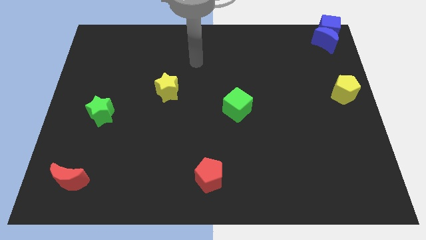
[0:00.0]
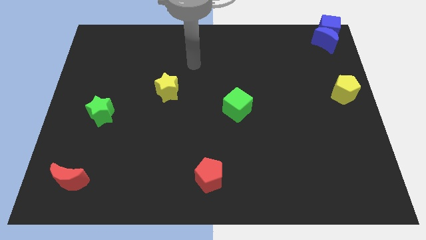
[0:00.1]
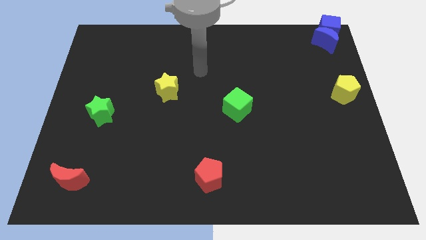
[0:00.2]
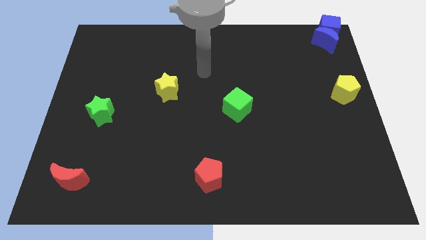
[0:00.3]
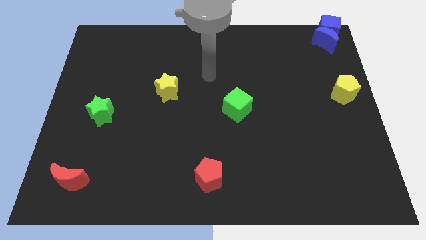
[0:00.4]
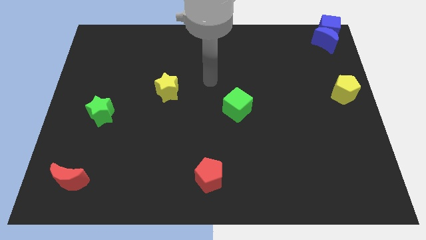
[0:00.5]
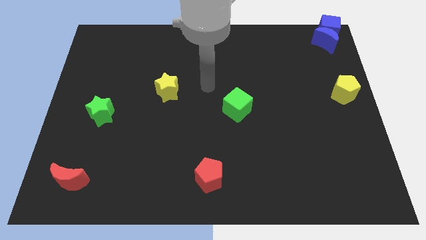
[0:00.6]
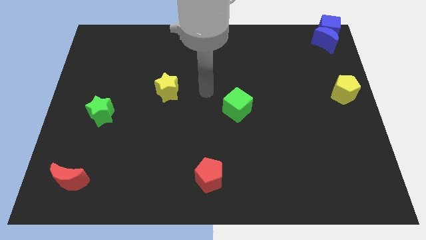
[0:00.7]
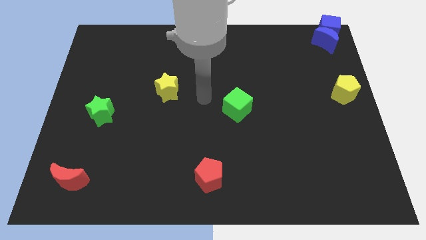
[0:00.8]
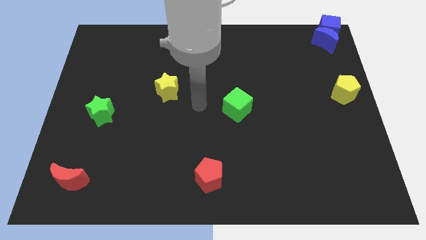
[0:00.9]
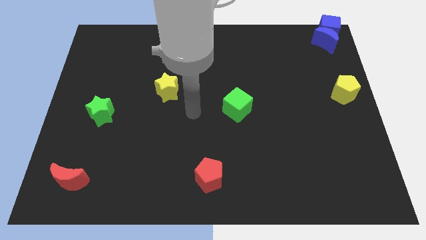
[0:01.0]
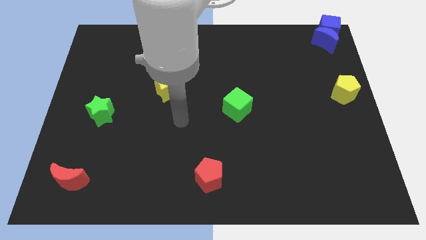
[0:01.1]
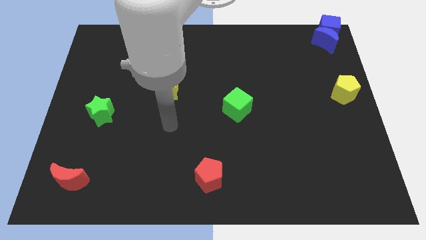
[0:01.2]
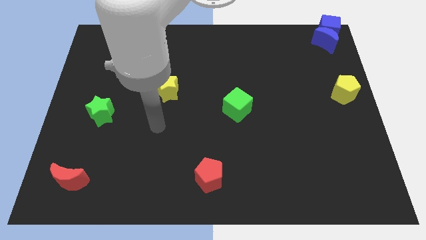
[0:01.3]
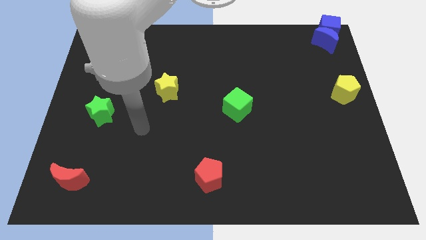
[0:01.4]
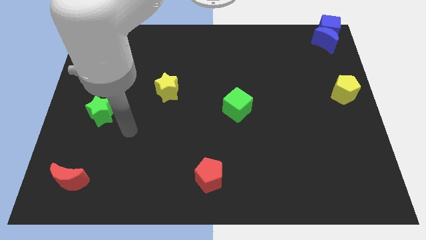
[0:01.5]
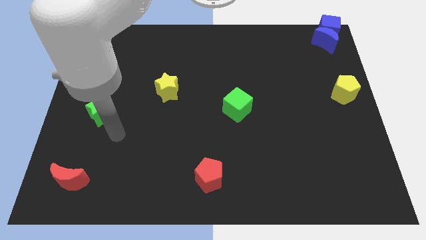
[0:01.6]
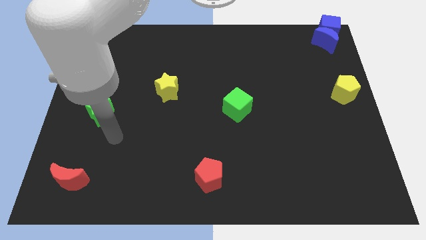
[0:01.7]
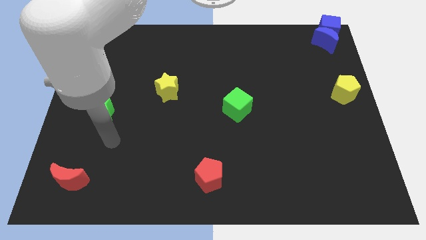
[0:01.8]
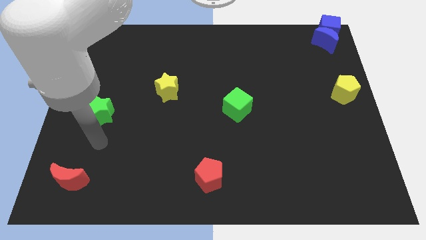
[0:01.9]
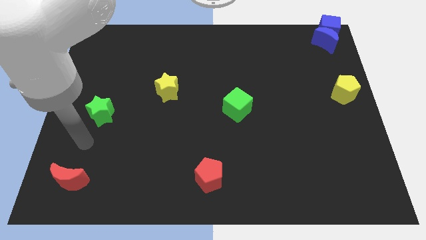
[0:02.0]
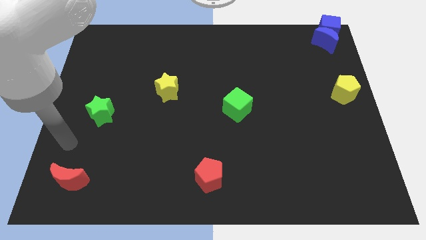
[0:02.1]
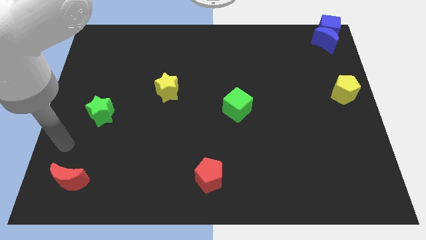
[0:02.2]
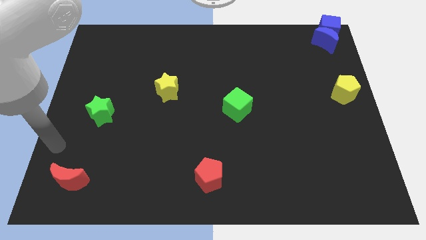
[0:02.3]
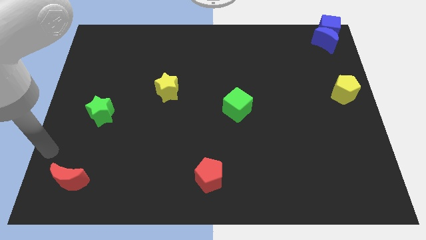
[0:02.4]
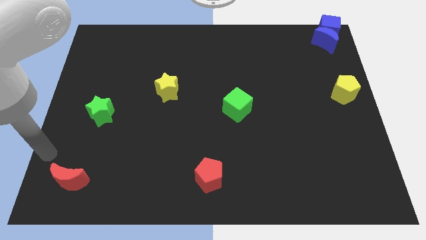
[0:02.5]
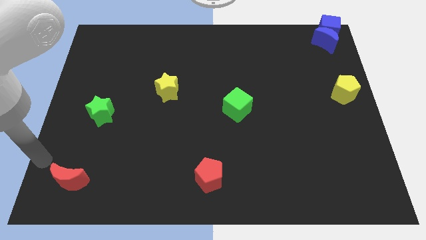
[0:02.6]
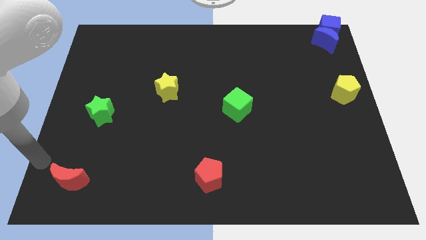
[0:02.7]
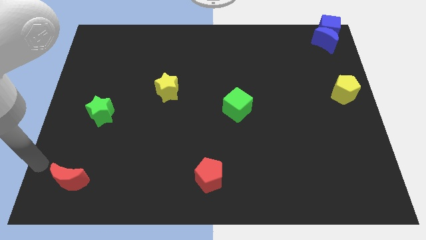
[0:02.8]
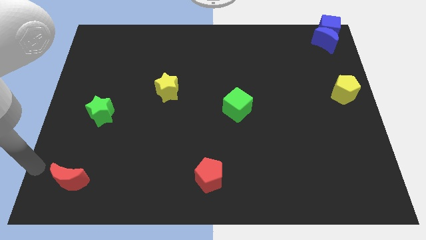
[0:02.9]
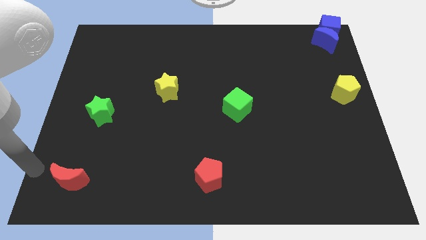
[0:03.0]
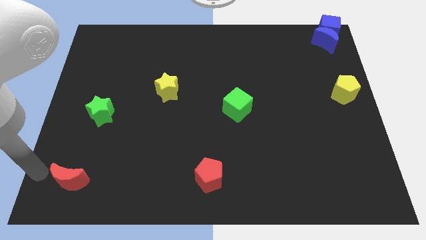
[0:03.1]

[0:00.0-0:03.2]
place your arm to the left side of red moon

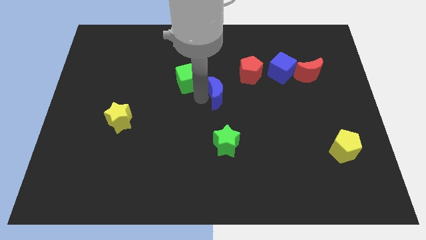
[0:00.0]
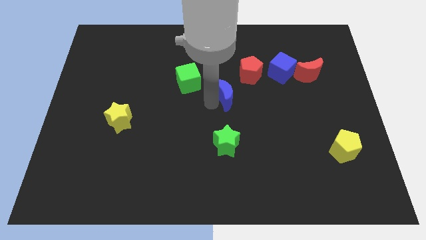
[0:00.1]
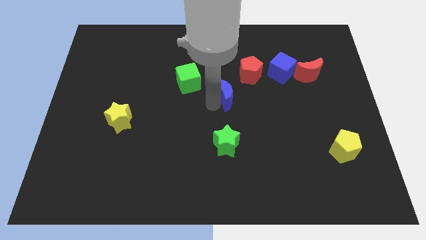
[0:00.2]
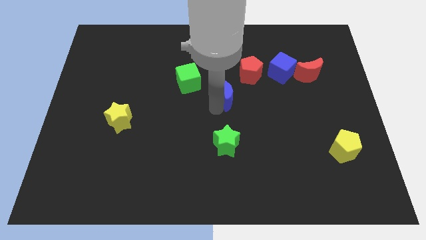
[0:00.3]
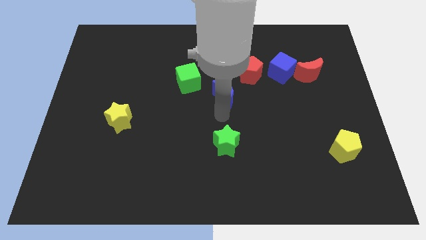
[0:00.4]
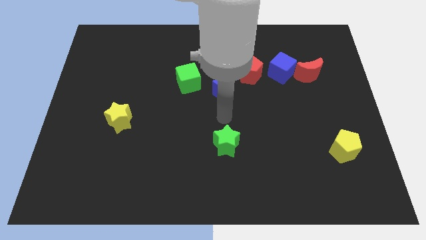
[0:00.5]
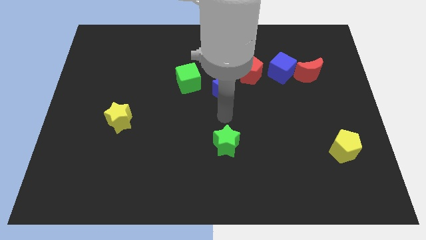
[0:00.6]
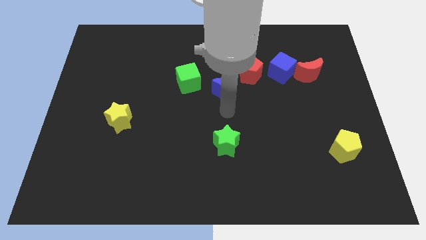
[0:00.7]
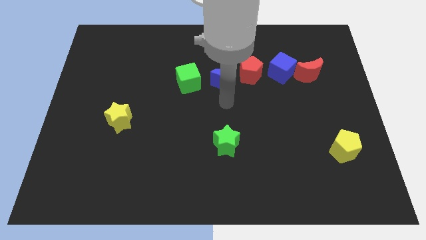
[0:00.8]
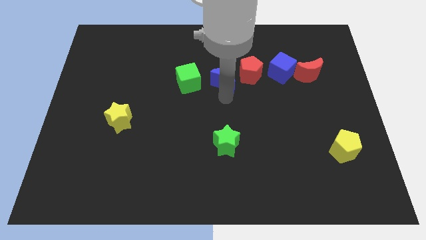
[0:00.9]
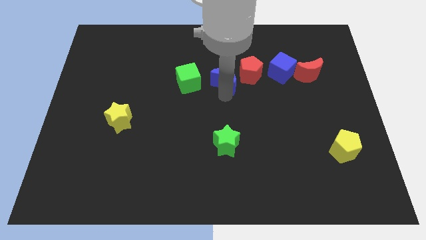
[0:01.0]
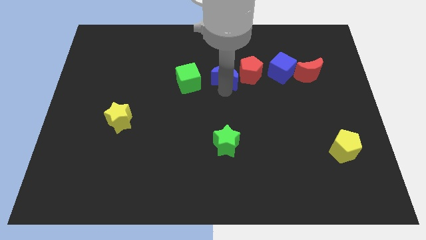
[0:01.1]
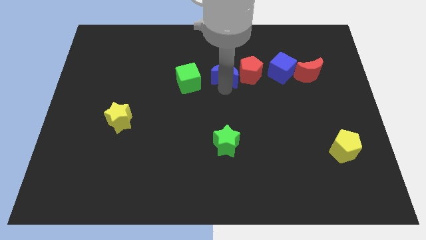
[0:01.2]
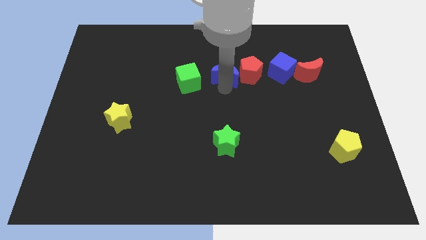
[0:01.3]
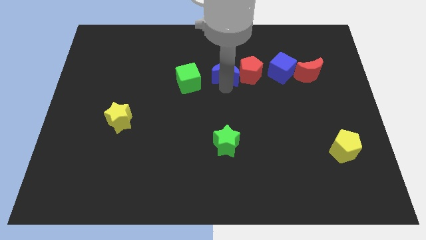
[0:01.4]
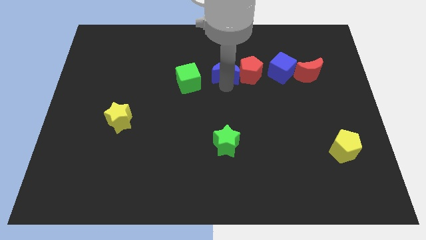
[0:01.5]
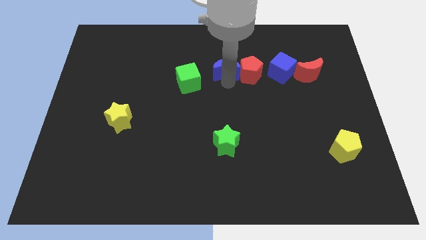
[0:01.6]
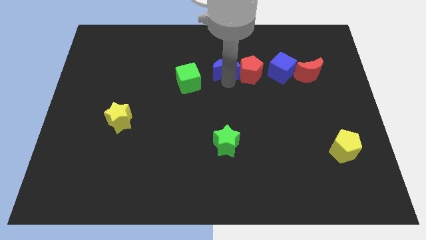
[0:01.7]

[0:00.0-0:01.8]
place the blue crescent left to the red pentagon

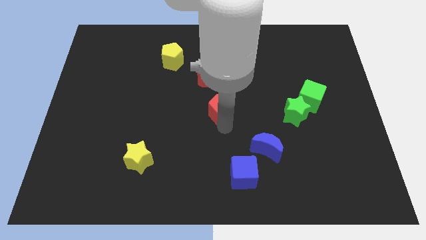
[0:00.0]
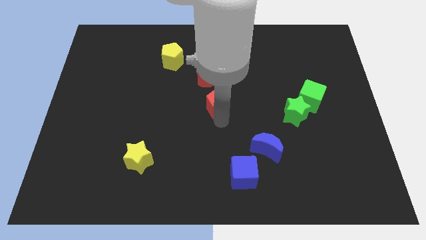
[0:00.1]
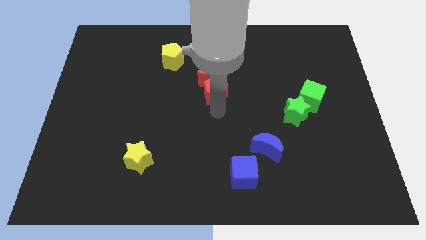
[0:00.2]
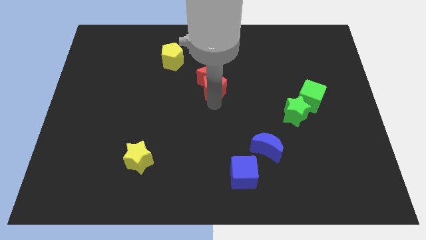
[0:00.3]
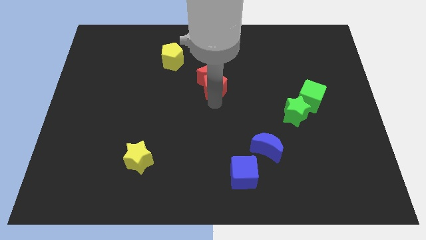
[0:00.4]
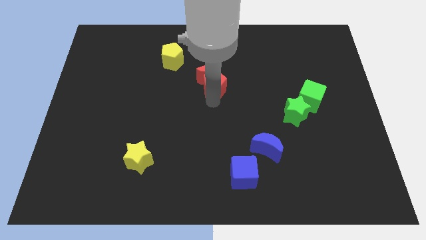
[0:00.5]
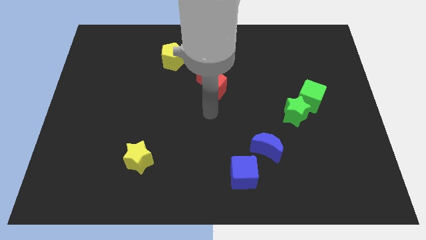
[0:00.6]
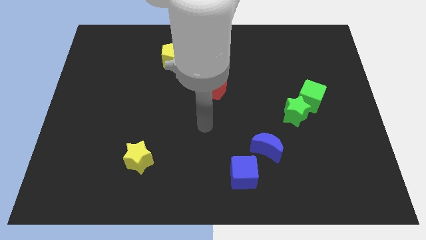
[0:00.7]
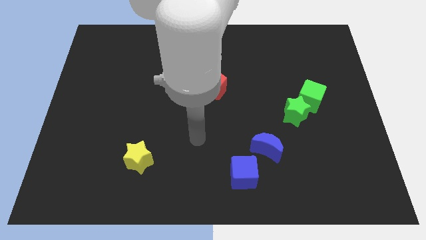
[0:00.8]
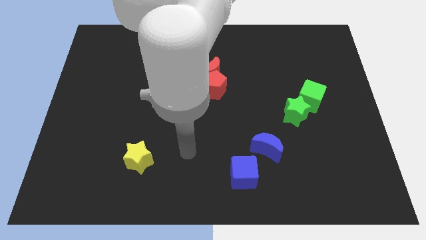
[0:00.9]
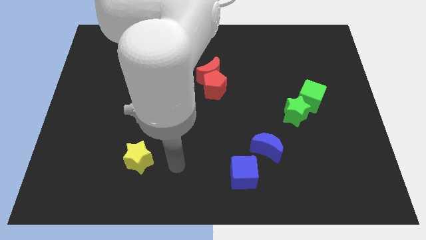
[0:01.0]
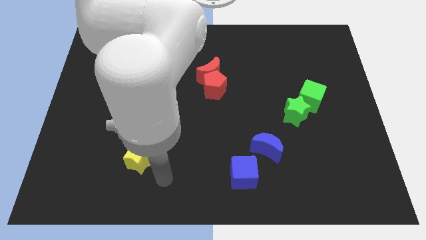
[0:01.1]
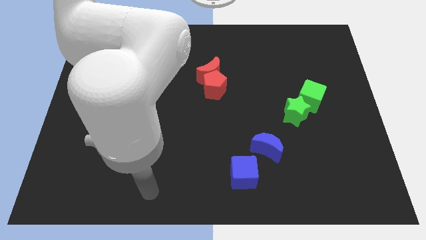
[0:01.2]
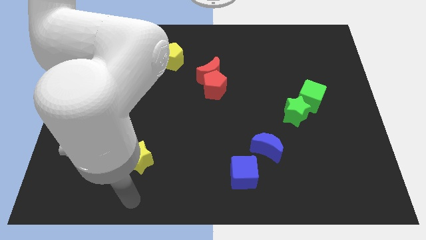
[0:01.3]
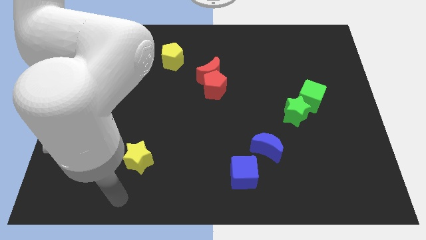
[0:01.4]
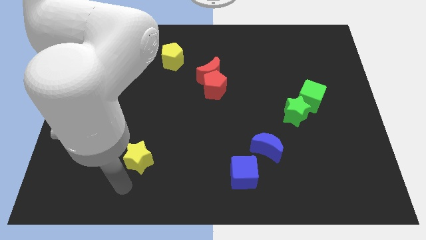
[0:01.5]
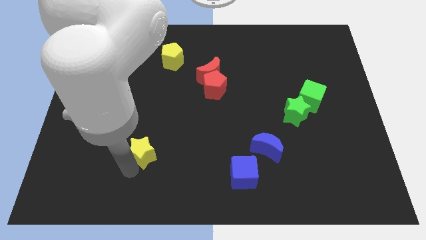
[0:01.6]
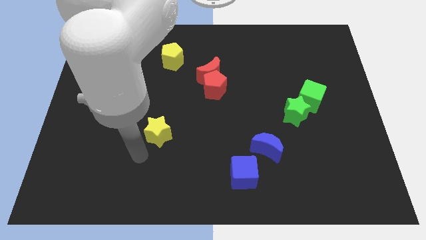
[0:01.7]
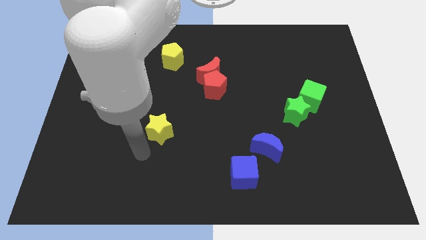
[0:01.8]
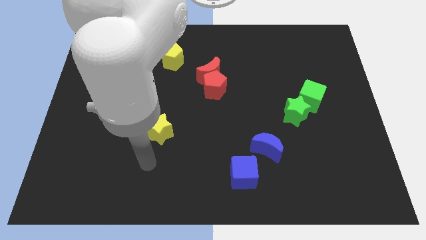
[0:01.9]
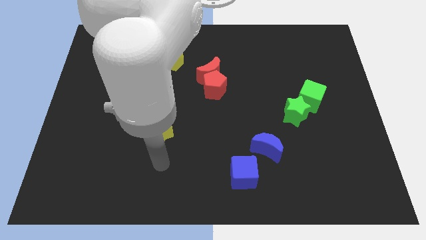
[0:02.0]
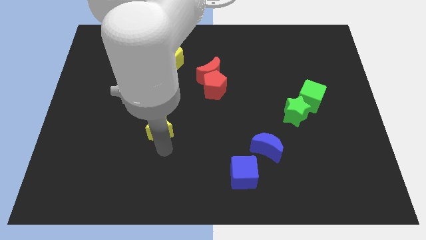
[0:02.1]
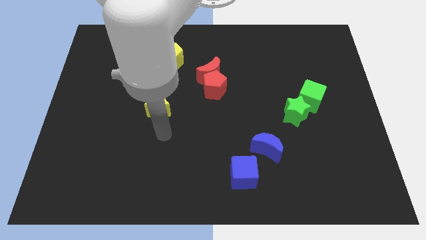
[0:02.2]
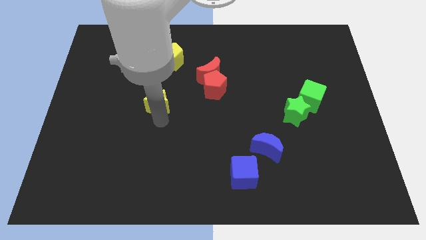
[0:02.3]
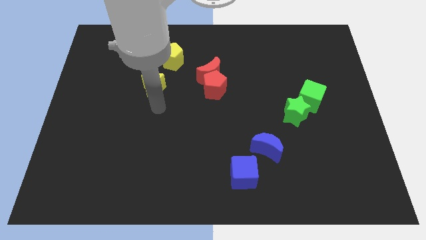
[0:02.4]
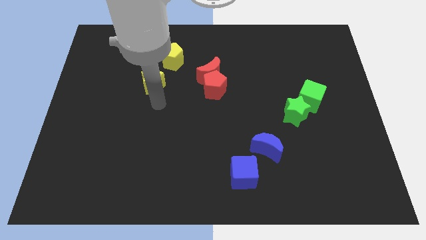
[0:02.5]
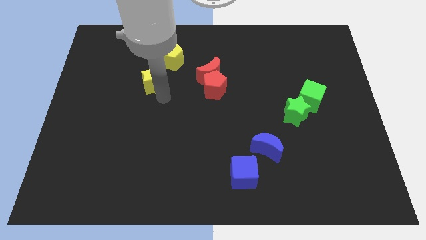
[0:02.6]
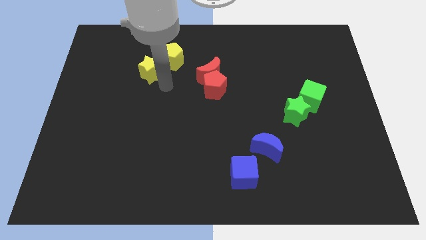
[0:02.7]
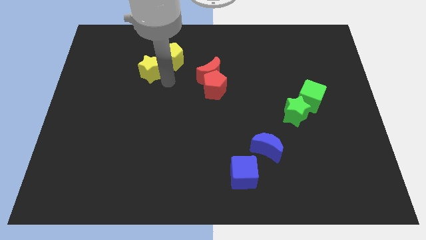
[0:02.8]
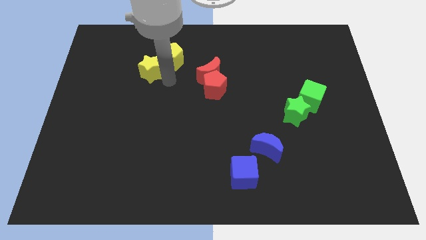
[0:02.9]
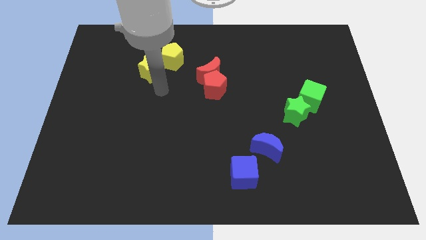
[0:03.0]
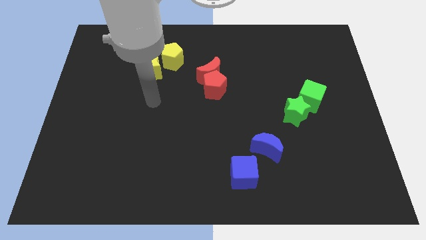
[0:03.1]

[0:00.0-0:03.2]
drag the yellow star parallel left to the red moon

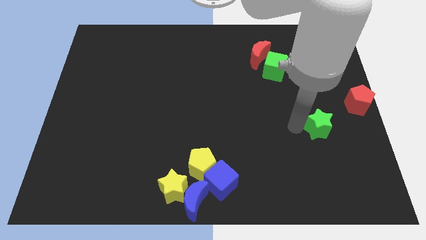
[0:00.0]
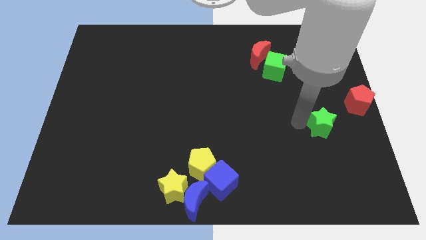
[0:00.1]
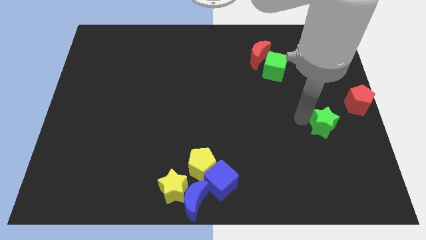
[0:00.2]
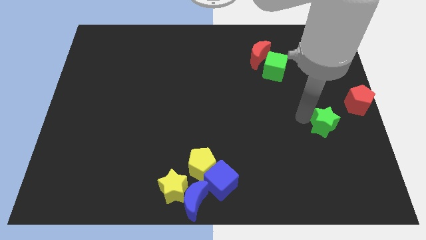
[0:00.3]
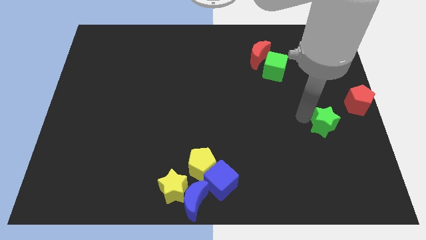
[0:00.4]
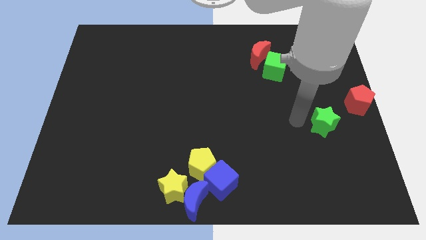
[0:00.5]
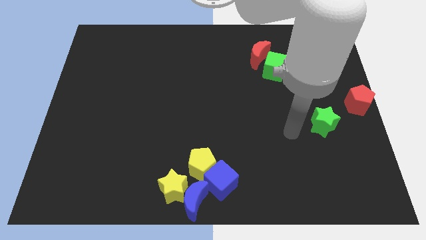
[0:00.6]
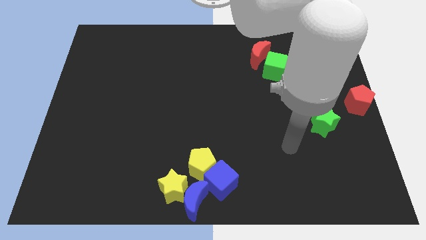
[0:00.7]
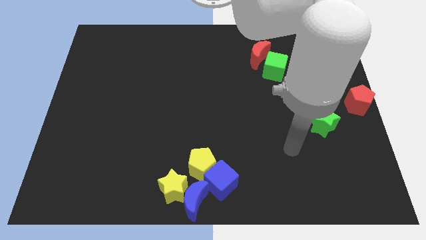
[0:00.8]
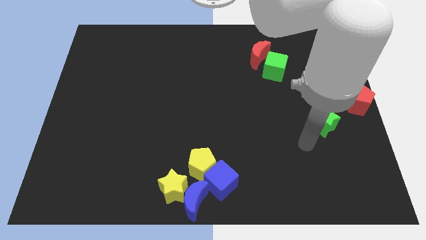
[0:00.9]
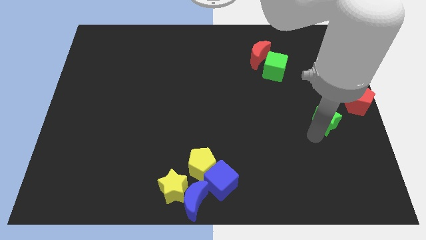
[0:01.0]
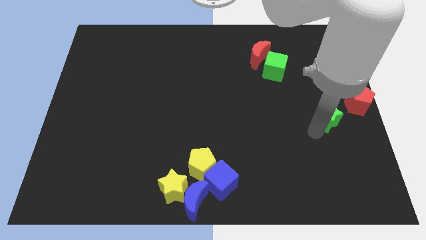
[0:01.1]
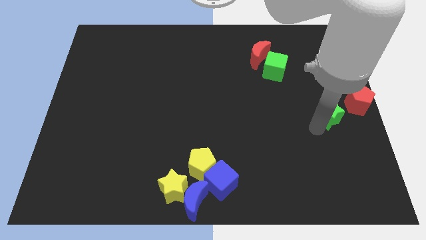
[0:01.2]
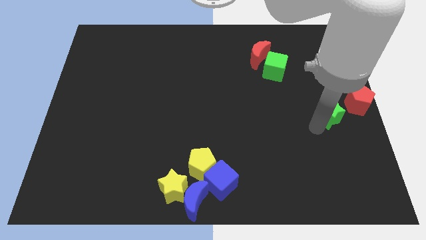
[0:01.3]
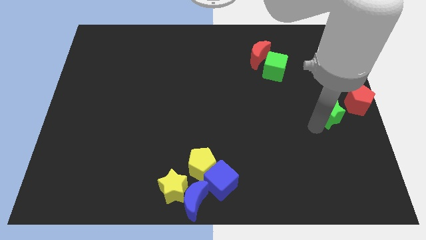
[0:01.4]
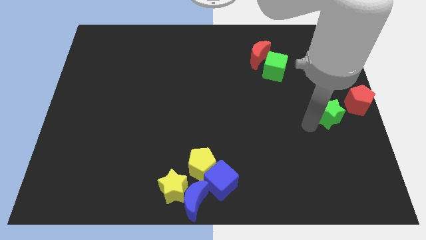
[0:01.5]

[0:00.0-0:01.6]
place green star to the left side of the red pentagon
